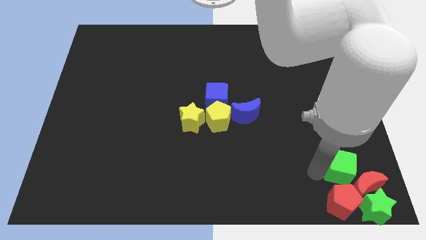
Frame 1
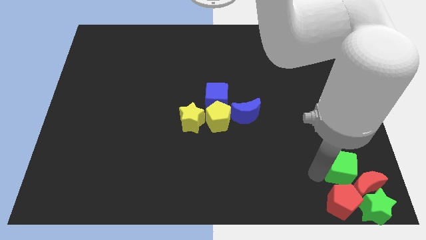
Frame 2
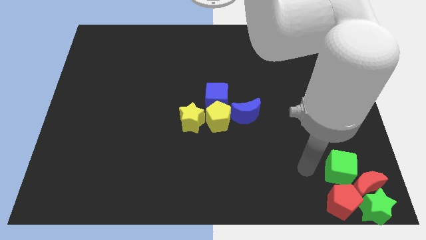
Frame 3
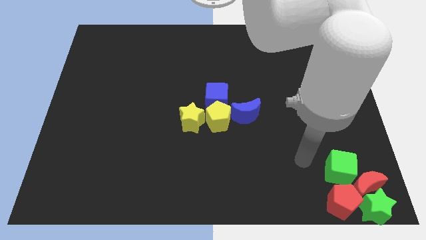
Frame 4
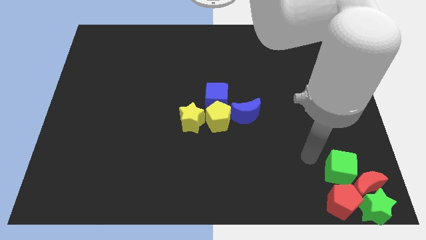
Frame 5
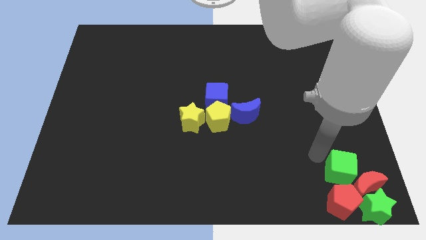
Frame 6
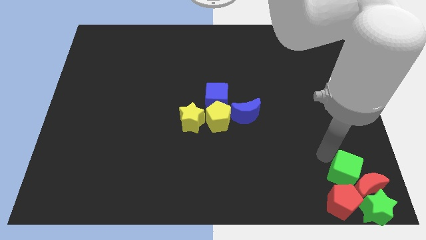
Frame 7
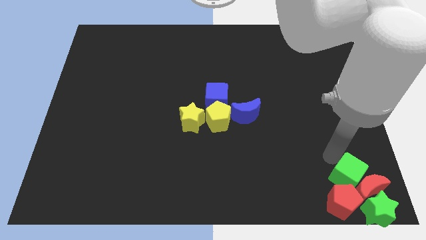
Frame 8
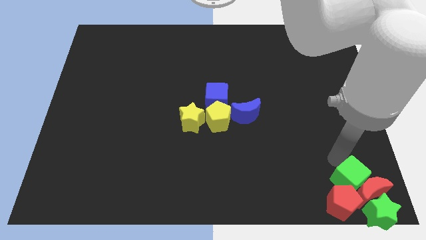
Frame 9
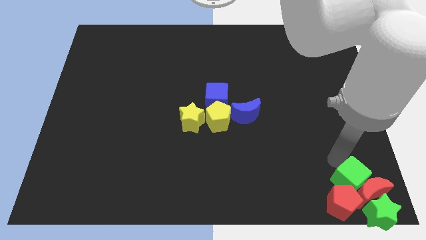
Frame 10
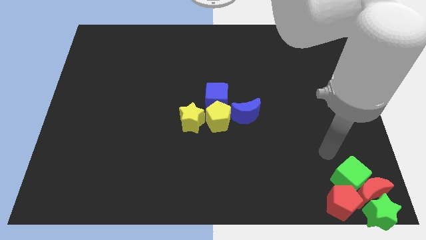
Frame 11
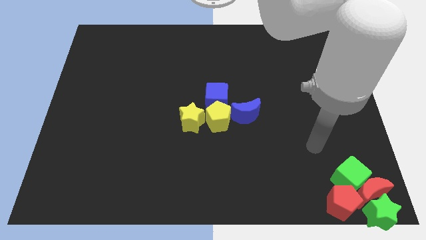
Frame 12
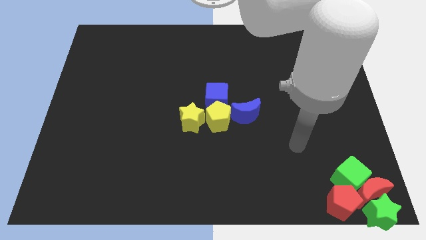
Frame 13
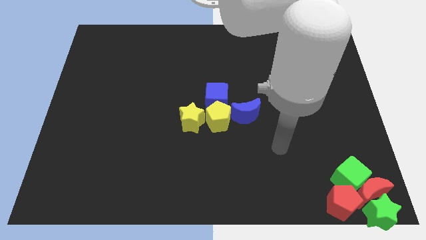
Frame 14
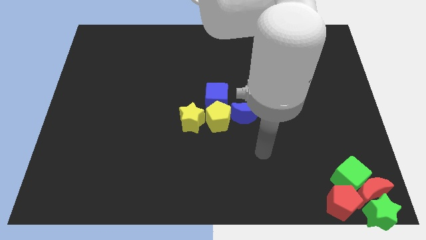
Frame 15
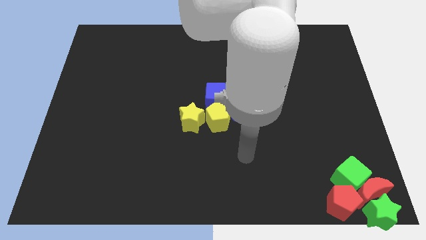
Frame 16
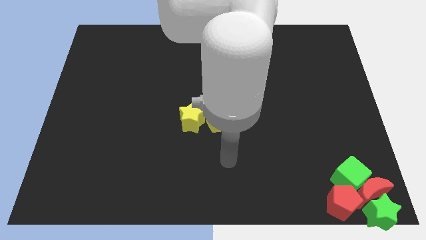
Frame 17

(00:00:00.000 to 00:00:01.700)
push the green cube into the red blocks

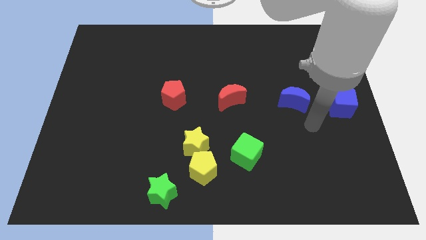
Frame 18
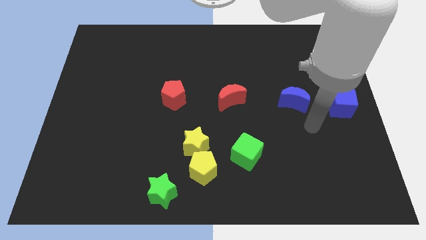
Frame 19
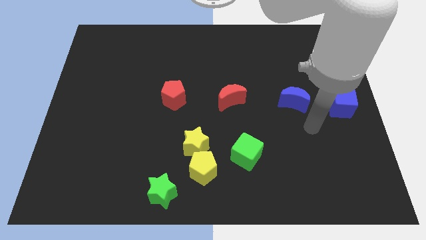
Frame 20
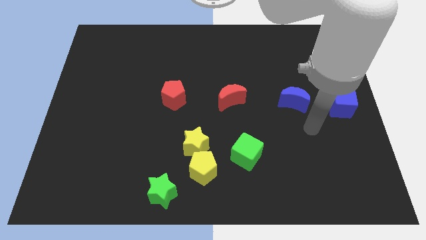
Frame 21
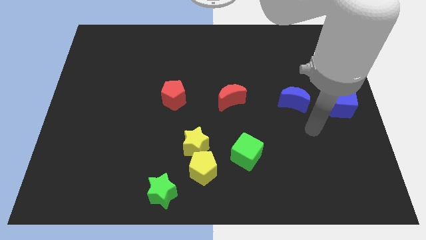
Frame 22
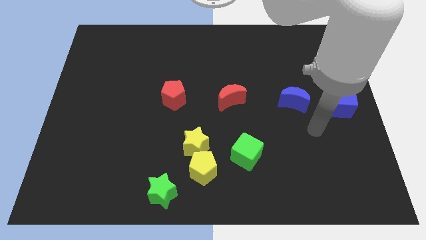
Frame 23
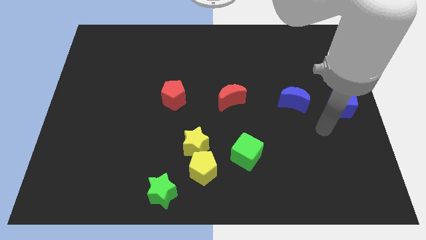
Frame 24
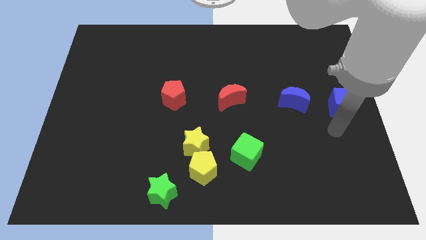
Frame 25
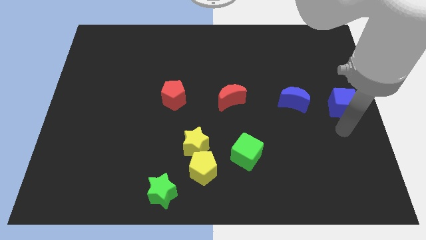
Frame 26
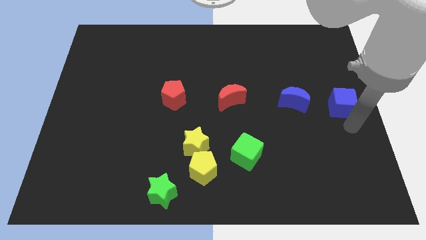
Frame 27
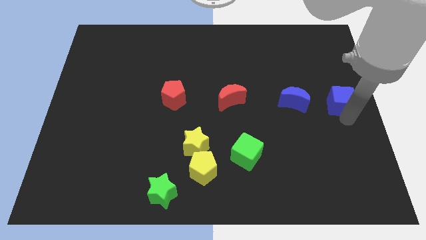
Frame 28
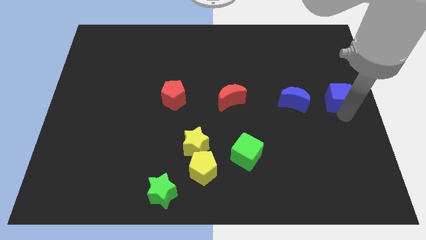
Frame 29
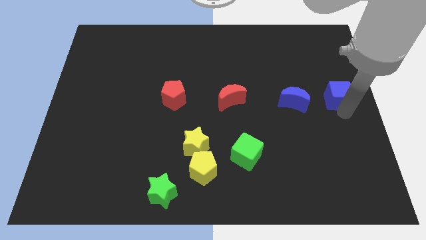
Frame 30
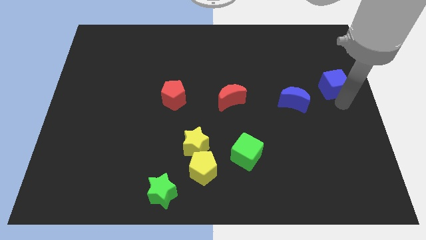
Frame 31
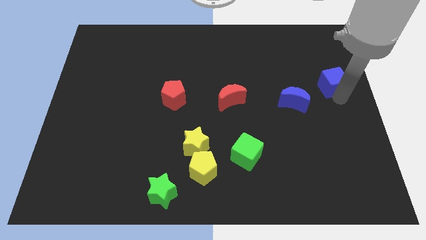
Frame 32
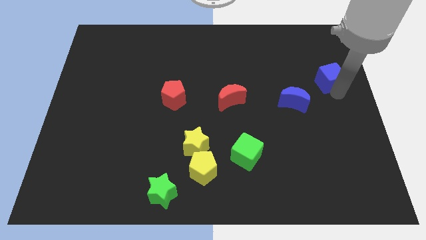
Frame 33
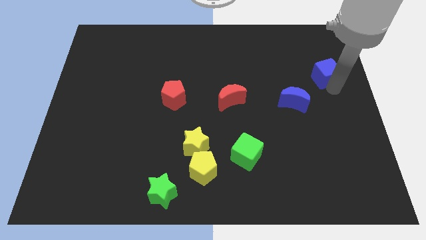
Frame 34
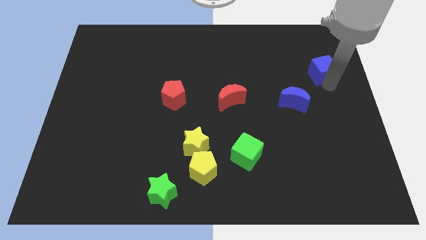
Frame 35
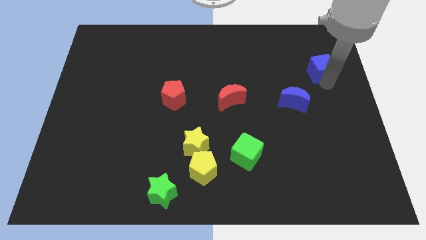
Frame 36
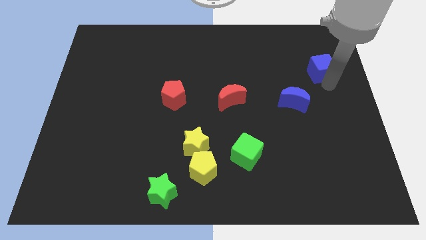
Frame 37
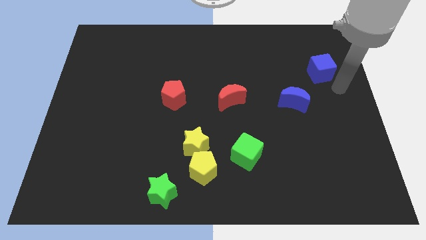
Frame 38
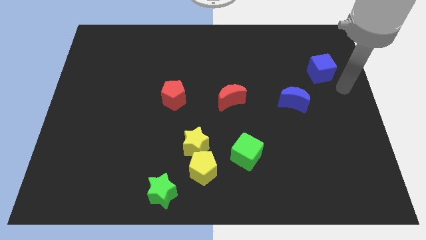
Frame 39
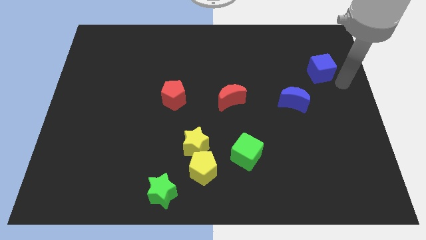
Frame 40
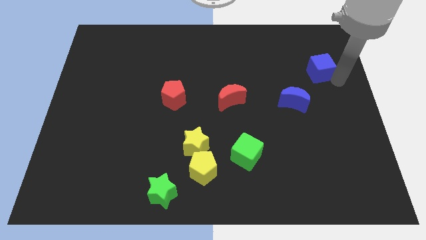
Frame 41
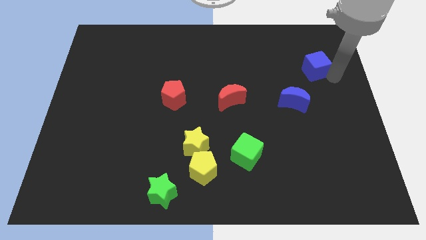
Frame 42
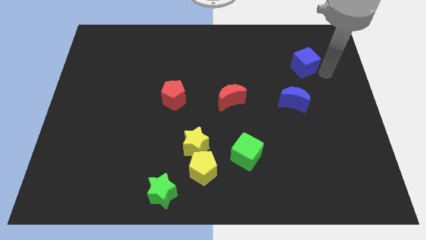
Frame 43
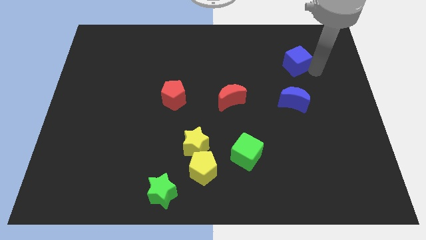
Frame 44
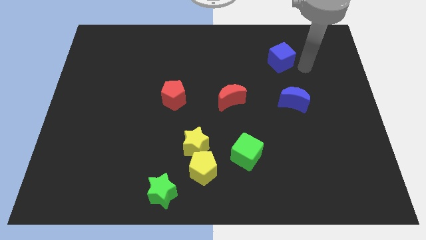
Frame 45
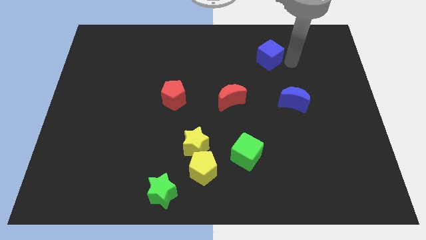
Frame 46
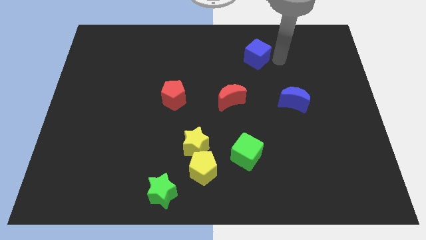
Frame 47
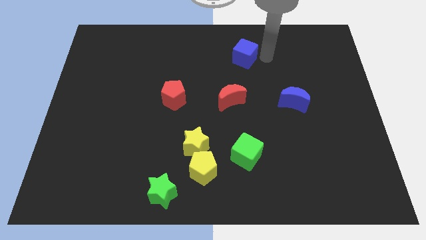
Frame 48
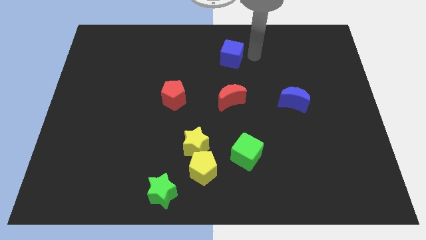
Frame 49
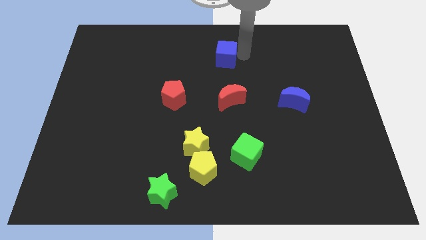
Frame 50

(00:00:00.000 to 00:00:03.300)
move the blue cube diagonally top left to the blue moon

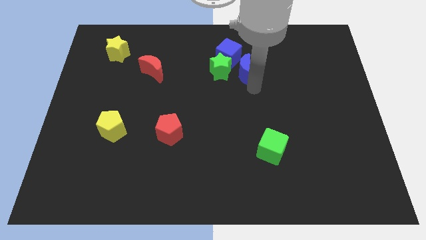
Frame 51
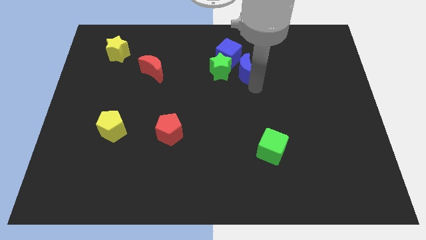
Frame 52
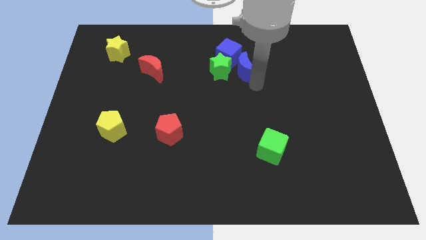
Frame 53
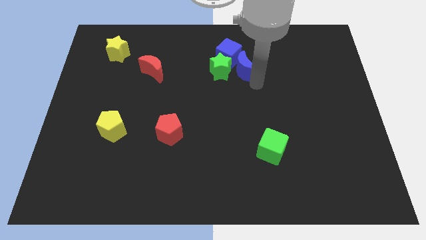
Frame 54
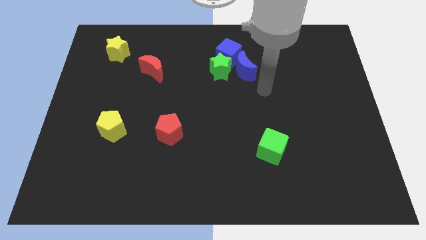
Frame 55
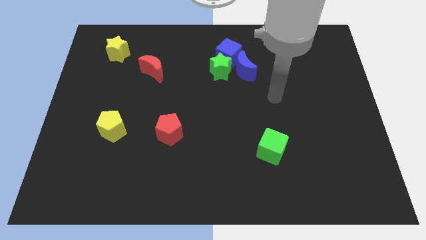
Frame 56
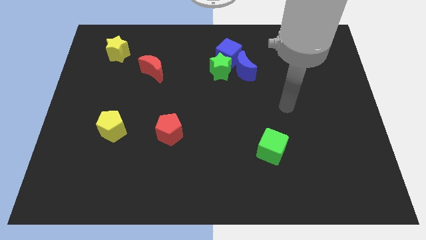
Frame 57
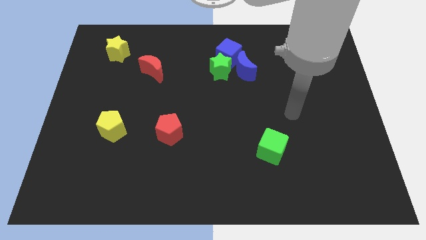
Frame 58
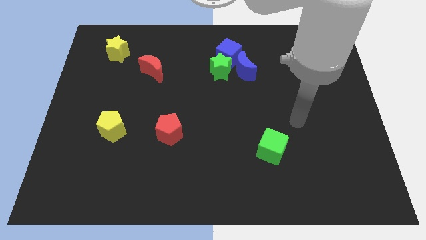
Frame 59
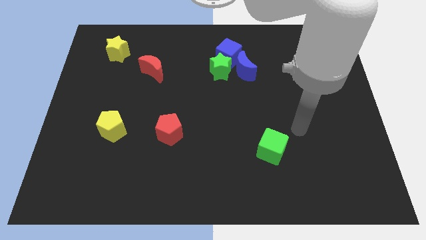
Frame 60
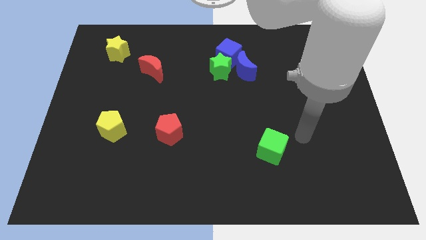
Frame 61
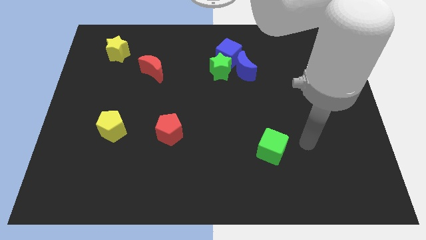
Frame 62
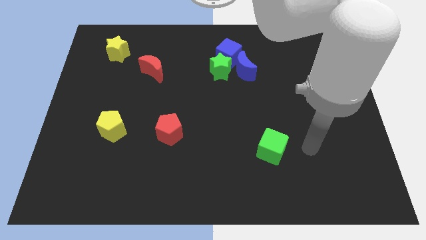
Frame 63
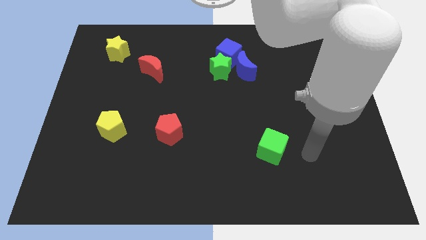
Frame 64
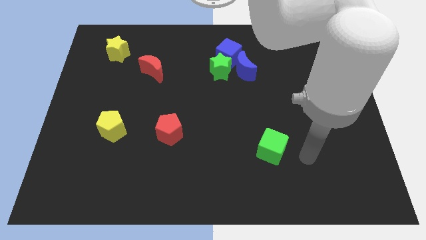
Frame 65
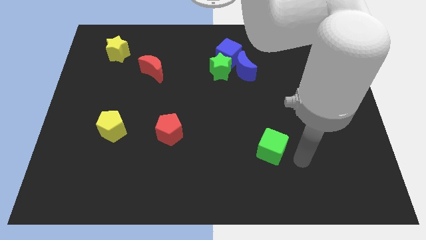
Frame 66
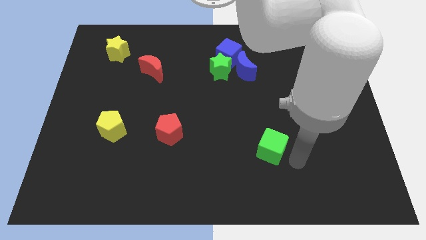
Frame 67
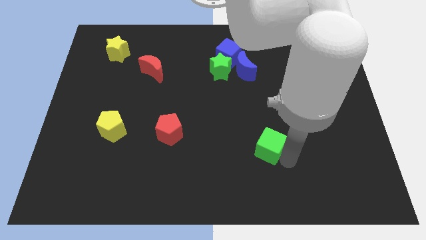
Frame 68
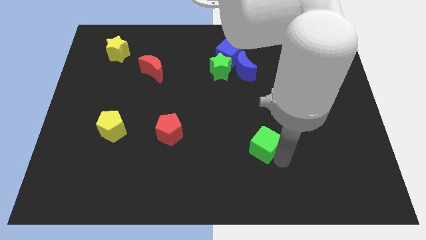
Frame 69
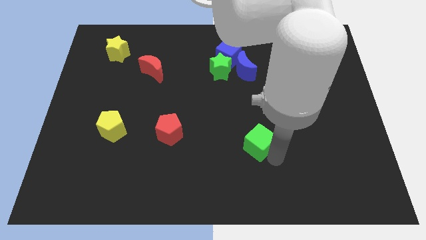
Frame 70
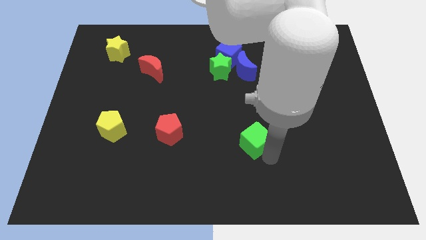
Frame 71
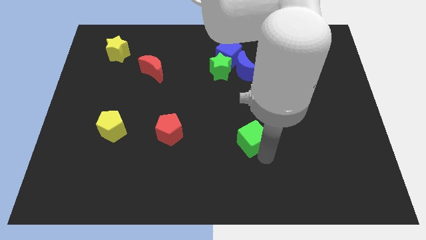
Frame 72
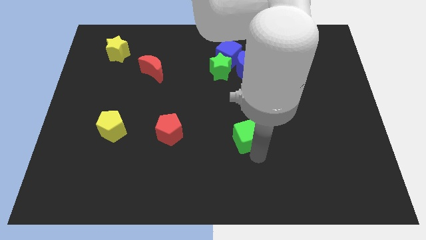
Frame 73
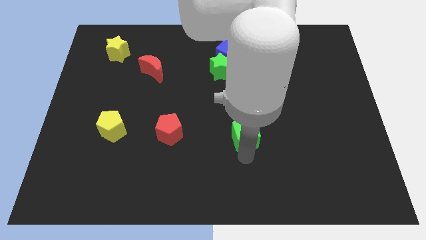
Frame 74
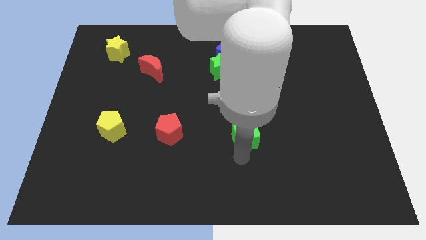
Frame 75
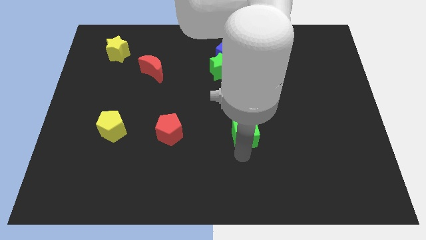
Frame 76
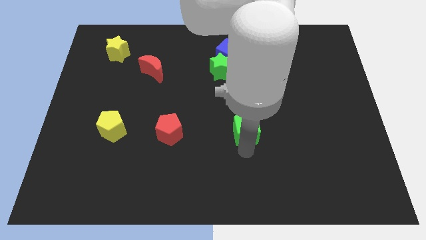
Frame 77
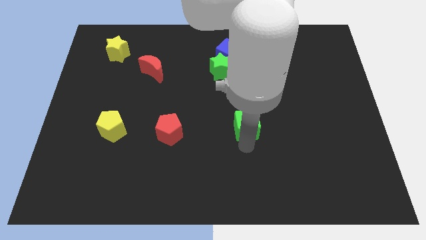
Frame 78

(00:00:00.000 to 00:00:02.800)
move the green cube right to the red pentagon

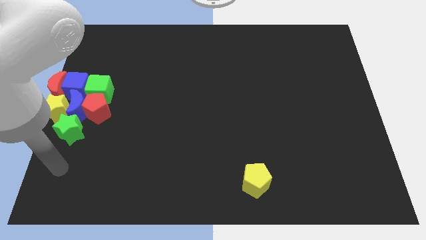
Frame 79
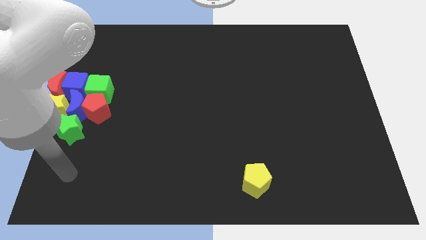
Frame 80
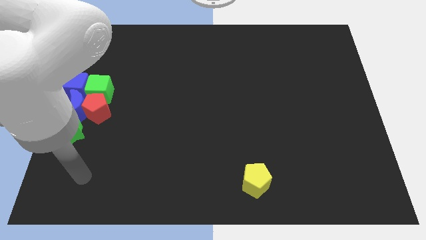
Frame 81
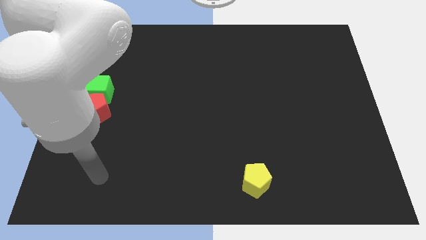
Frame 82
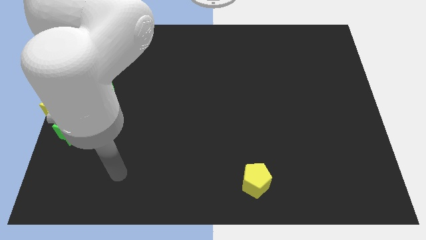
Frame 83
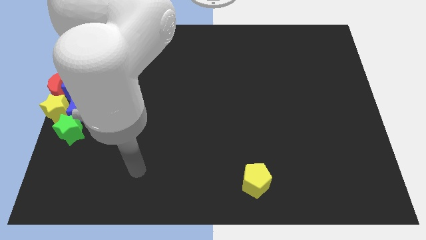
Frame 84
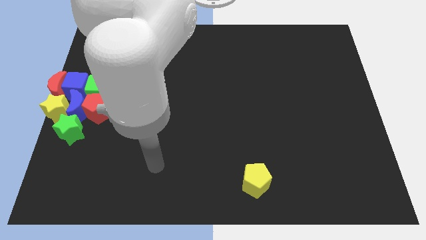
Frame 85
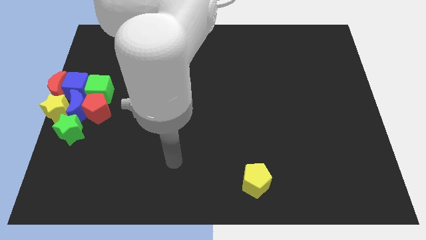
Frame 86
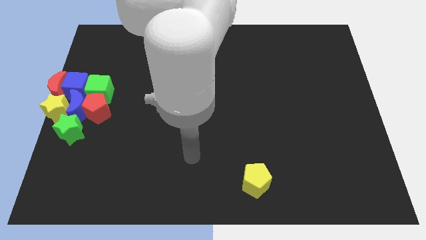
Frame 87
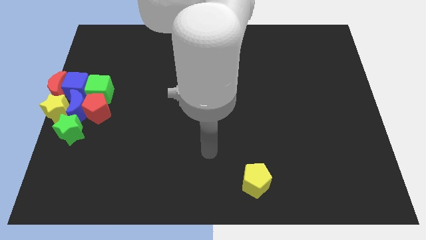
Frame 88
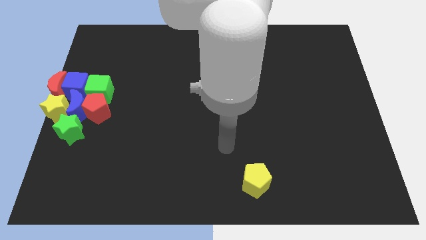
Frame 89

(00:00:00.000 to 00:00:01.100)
slide your arm to the top left of yellow pentagon

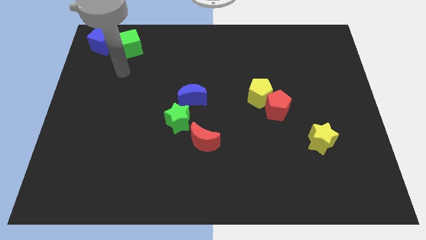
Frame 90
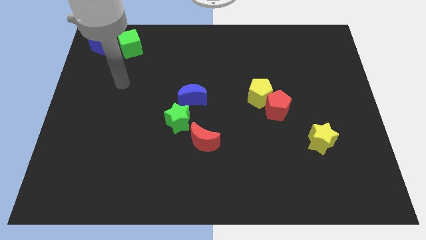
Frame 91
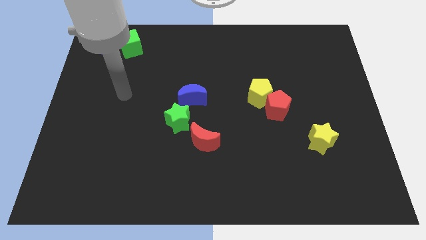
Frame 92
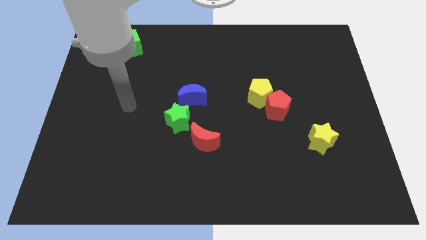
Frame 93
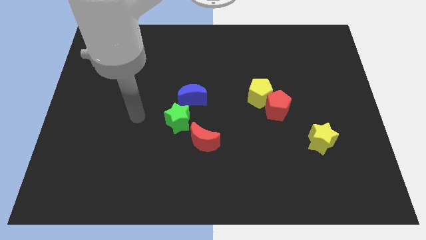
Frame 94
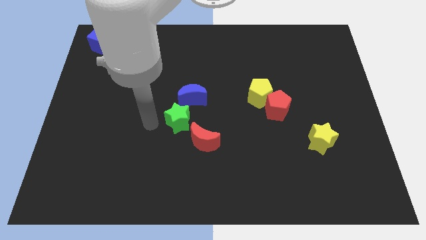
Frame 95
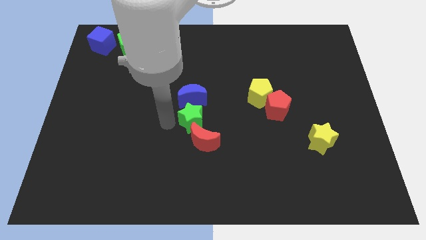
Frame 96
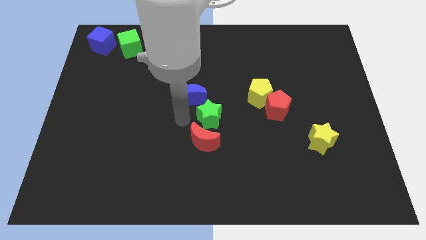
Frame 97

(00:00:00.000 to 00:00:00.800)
push the green star towards the center of the board
